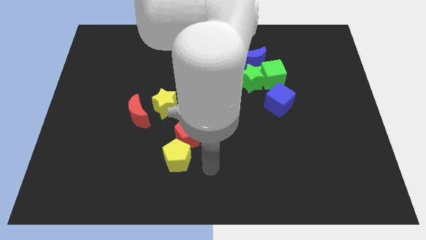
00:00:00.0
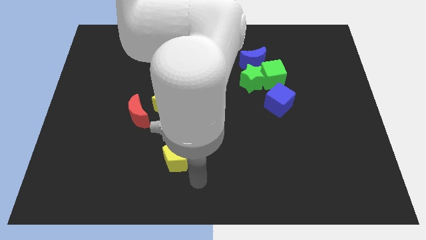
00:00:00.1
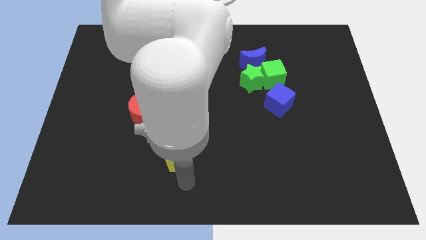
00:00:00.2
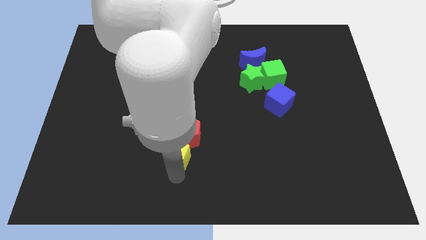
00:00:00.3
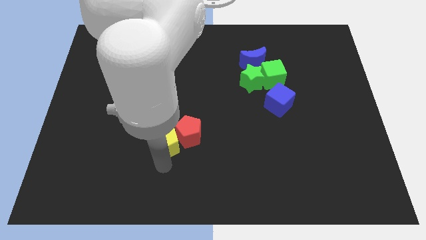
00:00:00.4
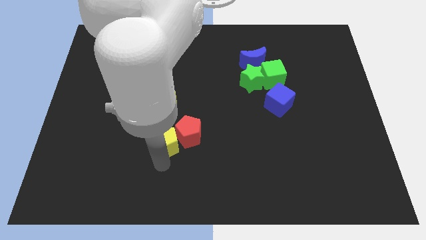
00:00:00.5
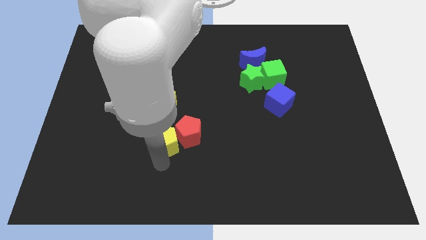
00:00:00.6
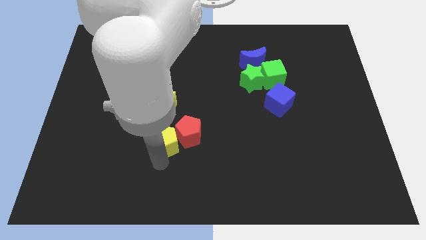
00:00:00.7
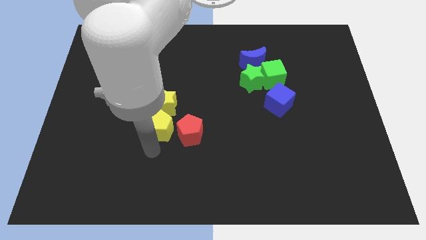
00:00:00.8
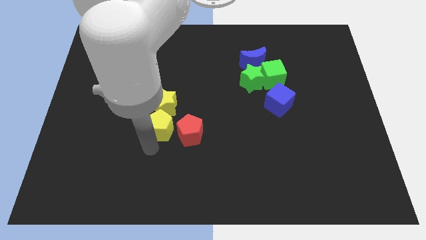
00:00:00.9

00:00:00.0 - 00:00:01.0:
place yellow pentagon below yellow star

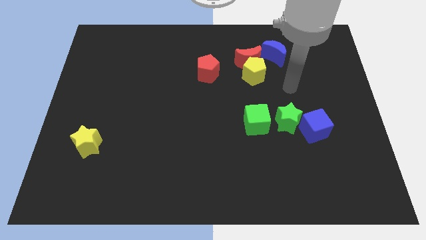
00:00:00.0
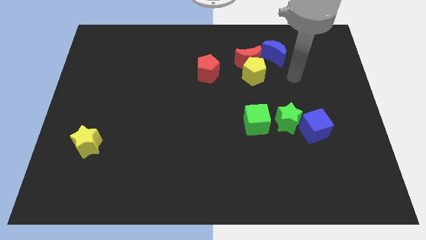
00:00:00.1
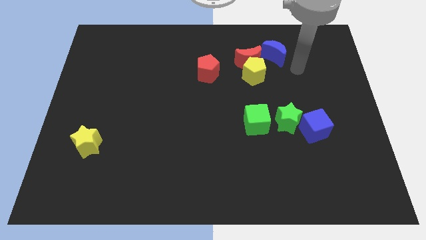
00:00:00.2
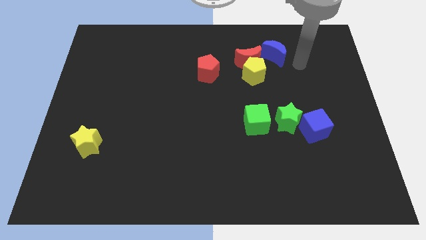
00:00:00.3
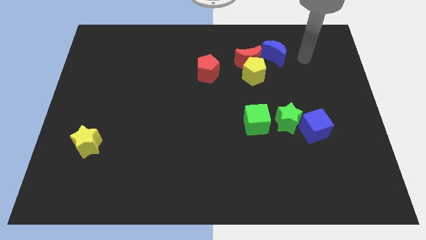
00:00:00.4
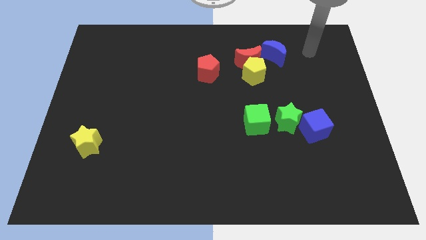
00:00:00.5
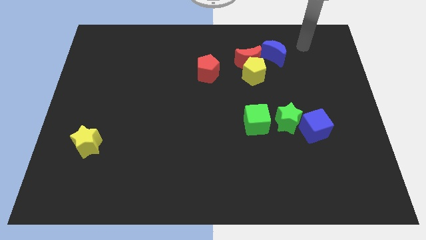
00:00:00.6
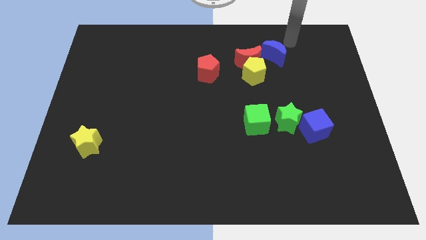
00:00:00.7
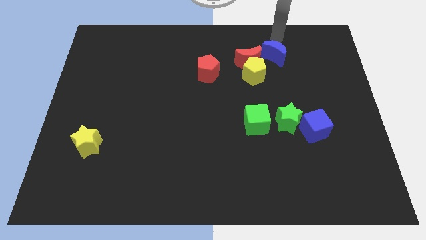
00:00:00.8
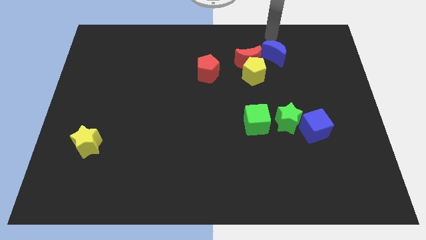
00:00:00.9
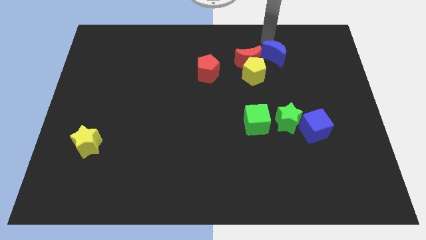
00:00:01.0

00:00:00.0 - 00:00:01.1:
move your arm on top of the blue crescent

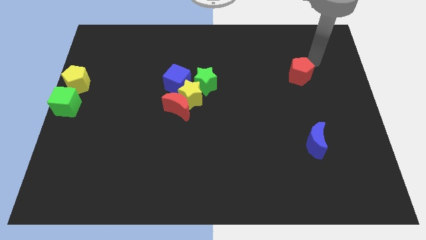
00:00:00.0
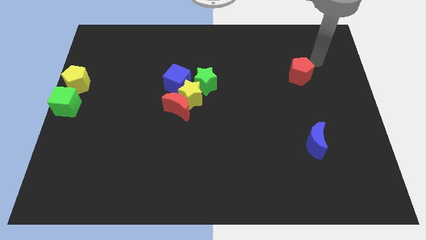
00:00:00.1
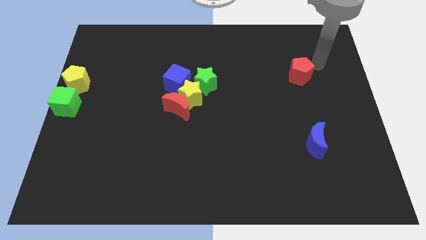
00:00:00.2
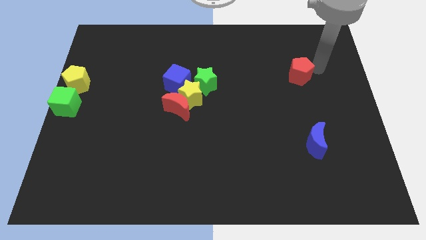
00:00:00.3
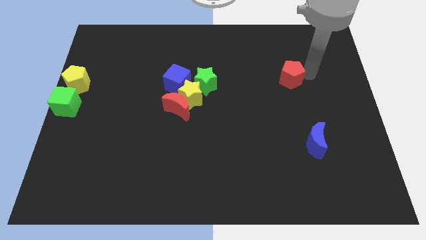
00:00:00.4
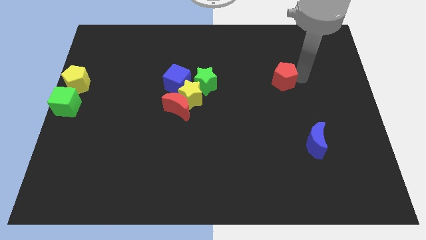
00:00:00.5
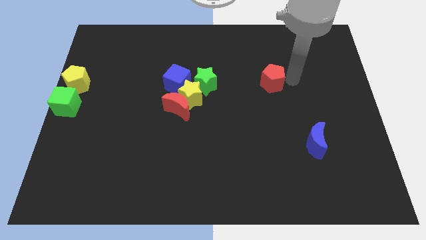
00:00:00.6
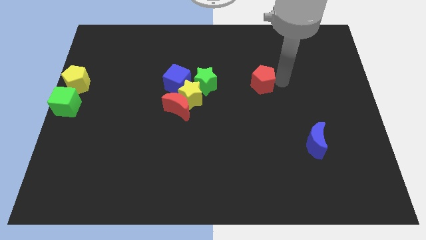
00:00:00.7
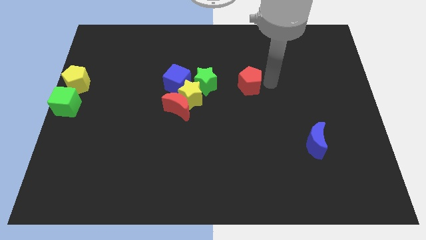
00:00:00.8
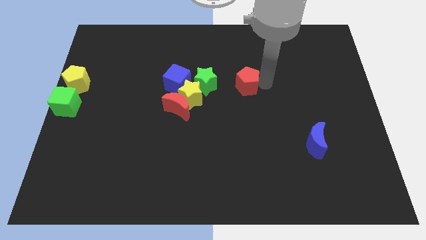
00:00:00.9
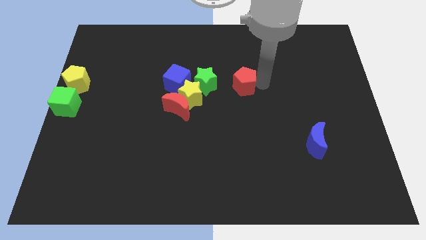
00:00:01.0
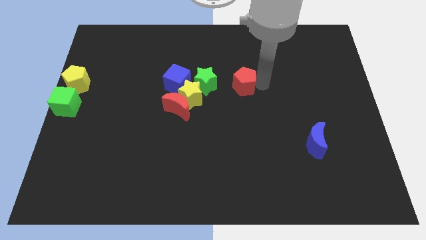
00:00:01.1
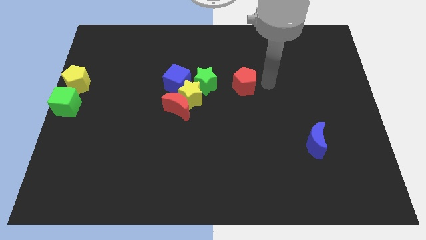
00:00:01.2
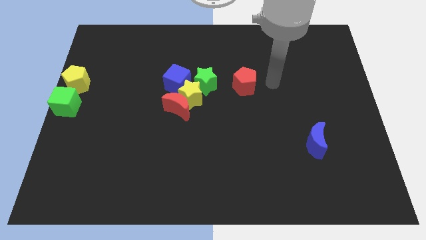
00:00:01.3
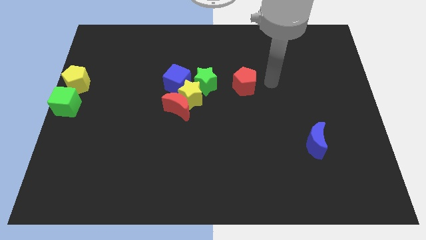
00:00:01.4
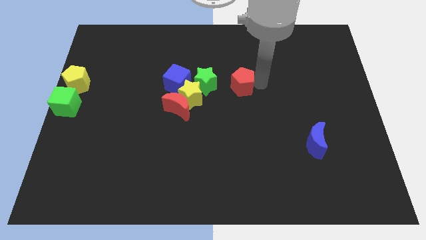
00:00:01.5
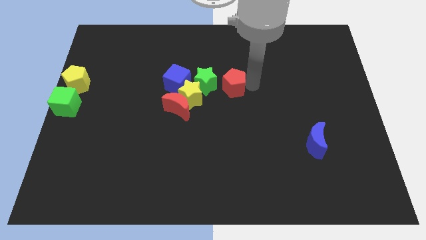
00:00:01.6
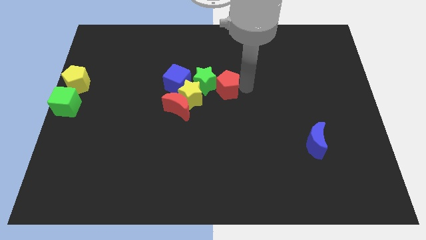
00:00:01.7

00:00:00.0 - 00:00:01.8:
move red pentagon towards the green star

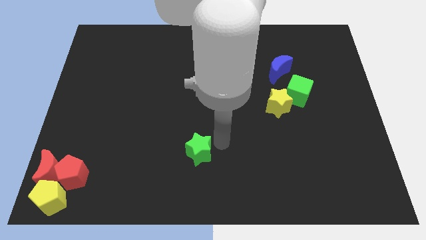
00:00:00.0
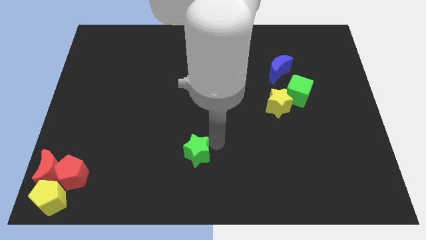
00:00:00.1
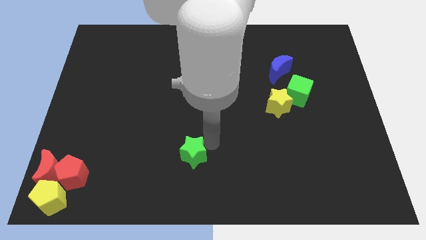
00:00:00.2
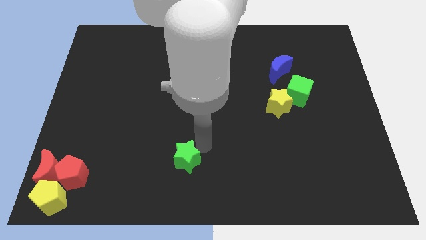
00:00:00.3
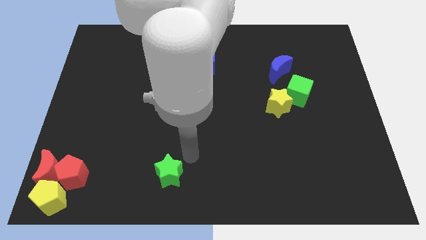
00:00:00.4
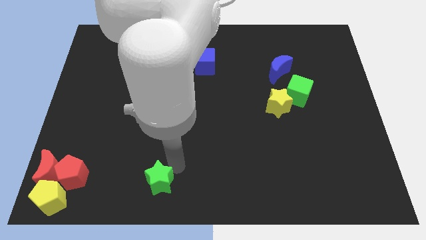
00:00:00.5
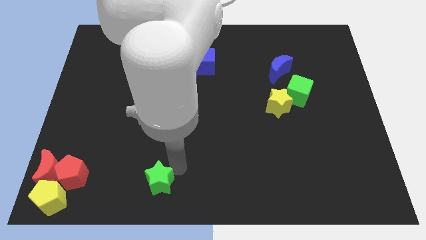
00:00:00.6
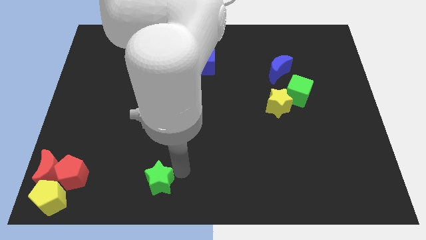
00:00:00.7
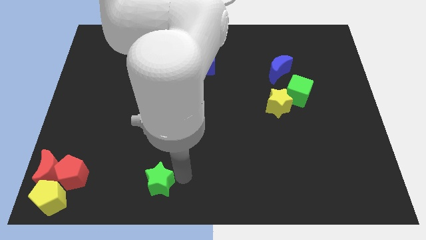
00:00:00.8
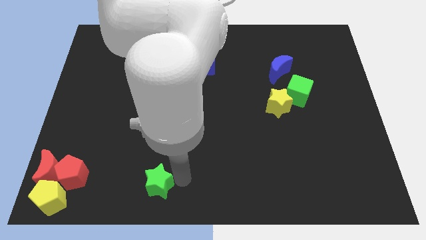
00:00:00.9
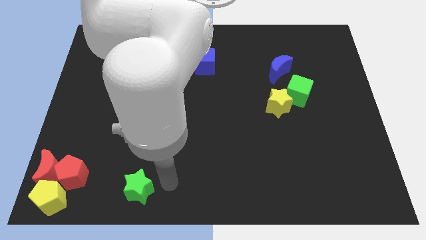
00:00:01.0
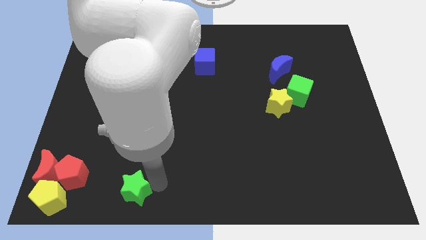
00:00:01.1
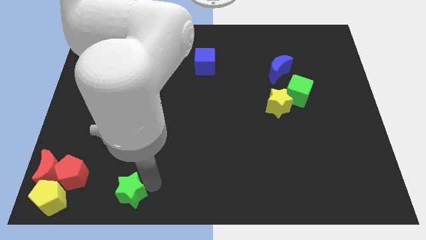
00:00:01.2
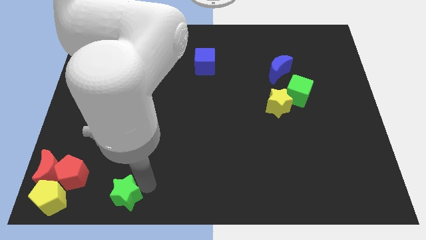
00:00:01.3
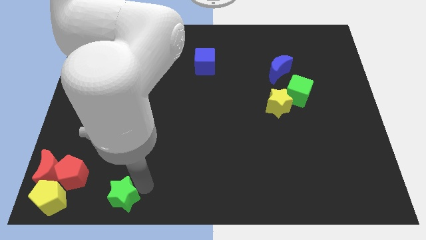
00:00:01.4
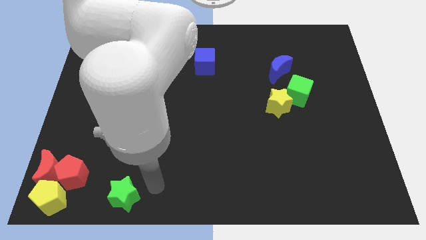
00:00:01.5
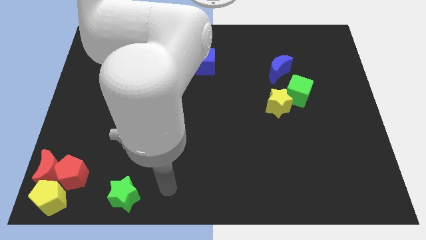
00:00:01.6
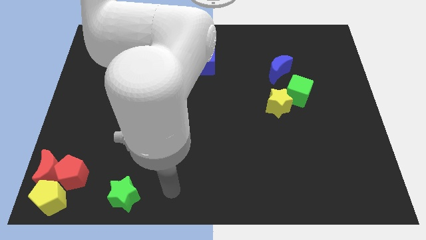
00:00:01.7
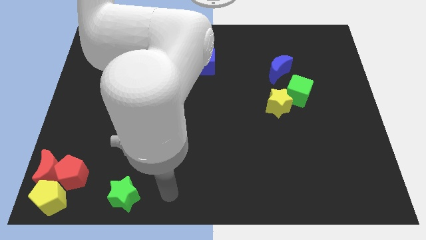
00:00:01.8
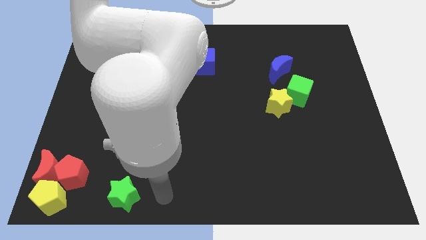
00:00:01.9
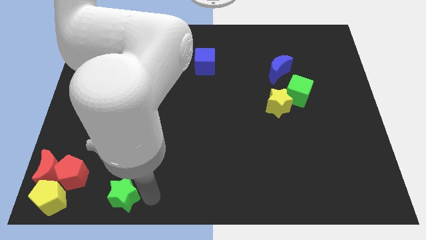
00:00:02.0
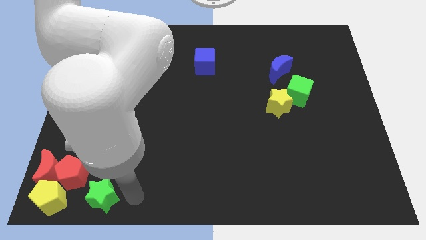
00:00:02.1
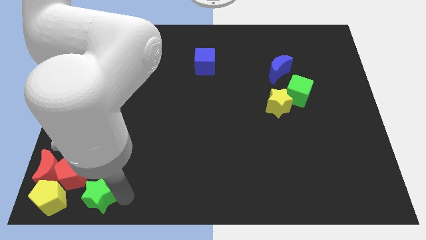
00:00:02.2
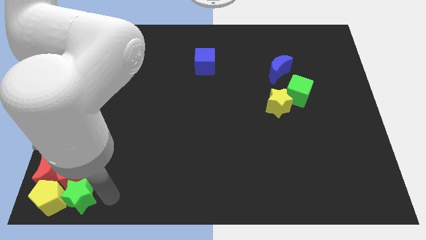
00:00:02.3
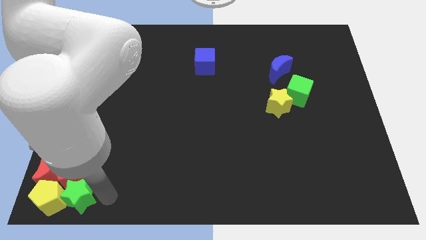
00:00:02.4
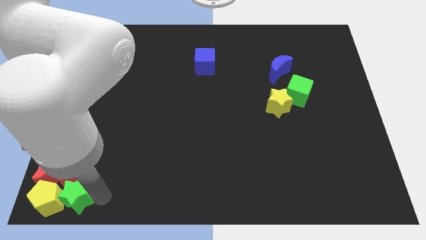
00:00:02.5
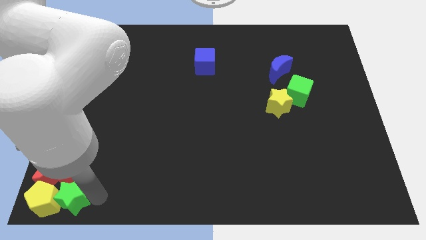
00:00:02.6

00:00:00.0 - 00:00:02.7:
push the green star into yellow pentagon

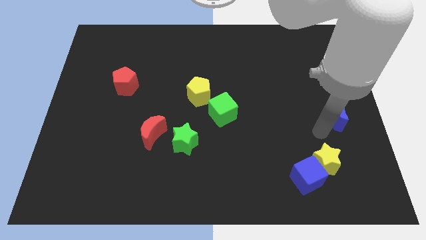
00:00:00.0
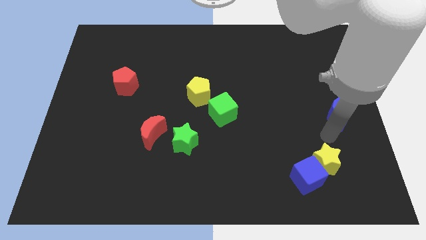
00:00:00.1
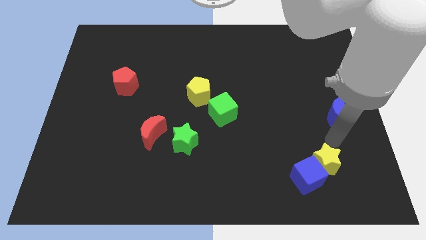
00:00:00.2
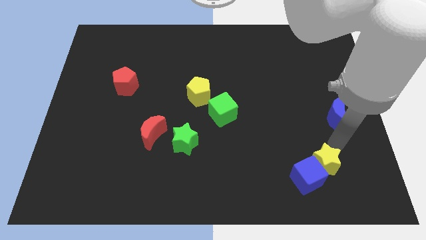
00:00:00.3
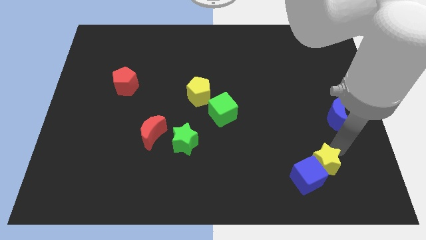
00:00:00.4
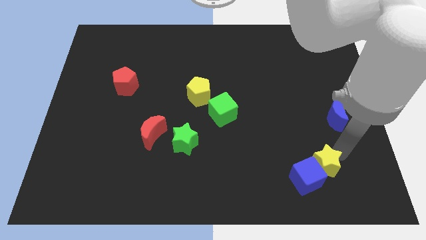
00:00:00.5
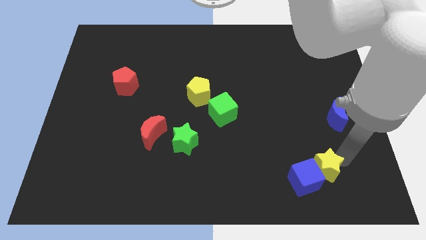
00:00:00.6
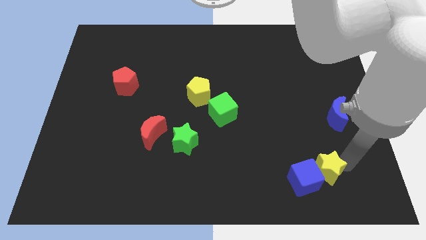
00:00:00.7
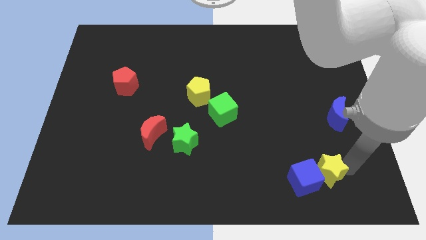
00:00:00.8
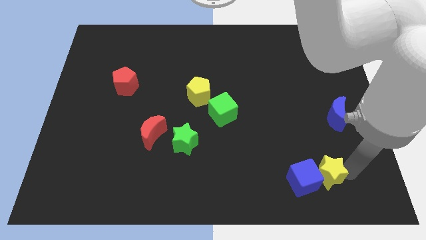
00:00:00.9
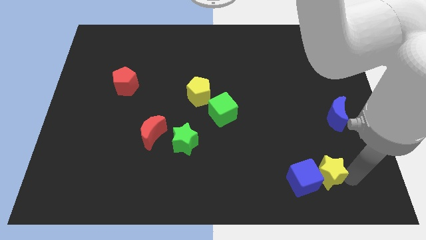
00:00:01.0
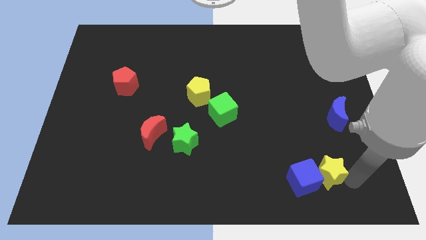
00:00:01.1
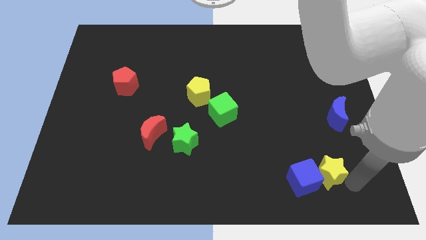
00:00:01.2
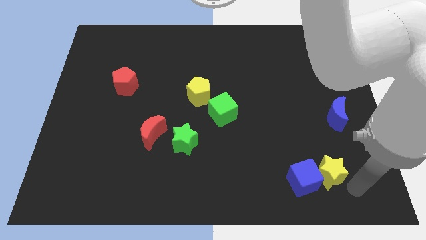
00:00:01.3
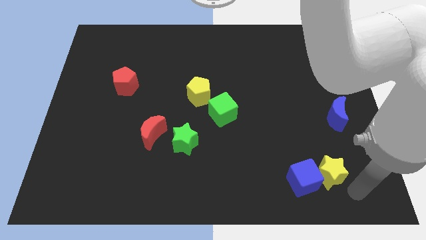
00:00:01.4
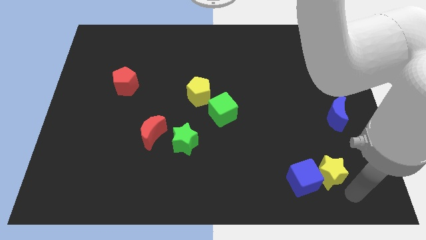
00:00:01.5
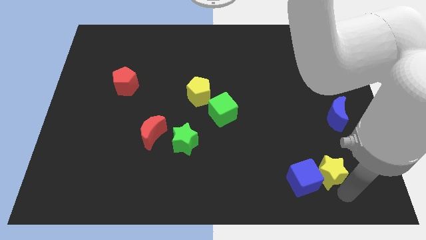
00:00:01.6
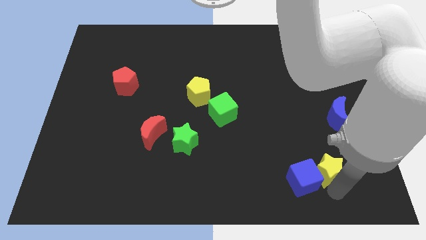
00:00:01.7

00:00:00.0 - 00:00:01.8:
push the yellow star to the right of the blue moon

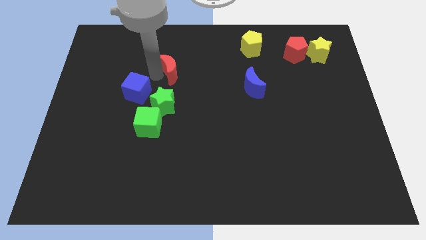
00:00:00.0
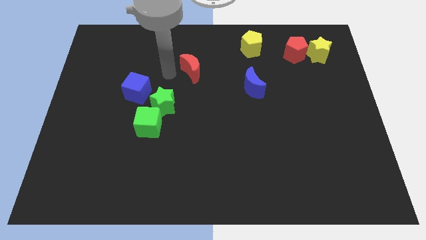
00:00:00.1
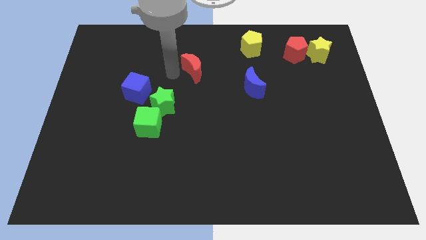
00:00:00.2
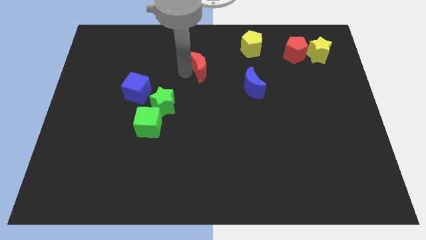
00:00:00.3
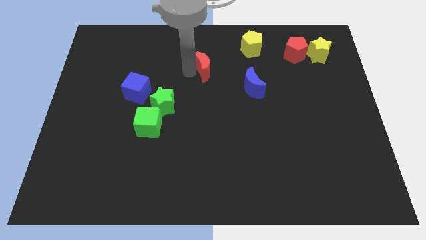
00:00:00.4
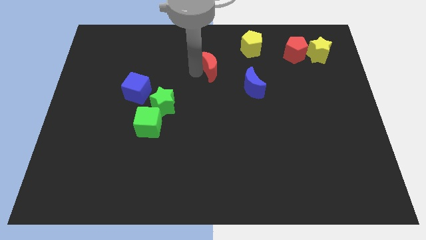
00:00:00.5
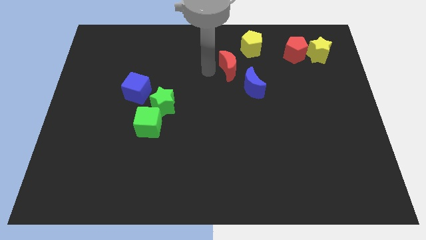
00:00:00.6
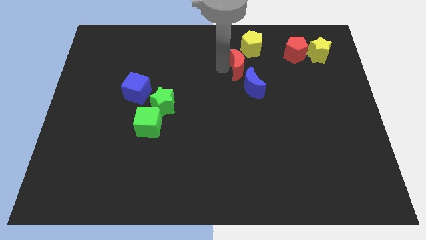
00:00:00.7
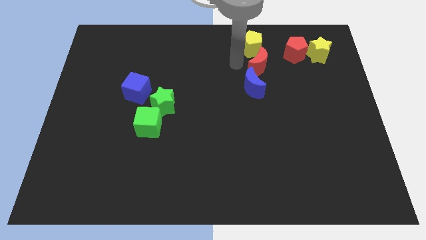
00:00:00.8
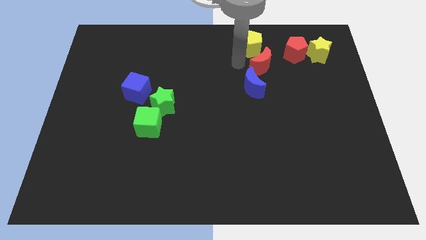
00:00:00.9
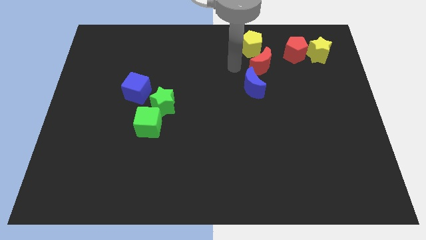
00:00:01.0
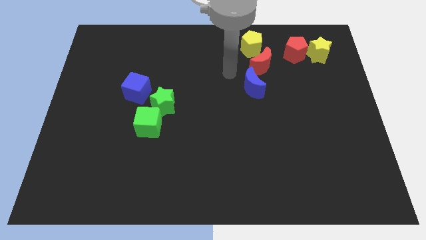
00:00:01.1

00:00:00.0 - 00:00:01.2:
put the red crescent below the yellow pentagon
